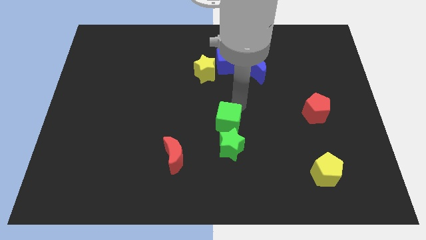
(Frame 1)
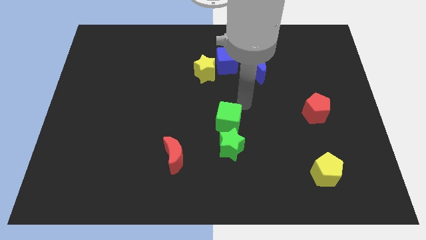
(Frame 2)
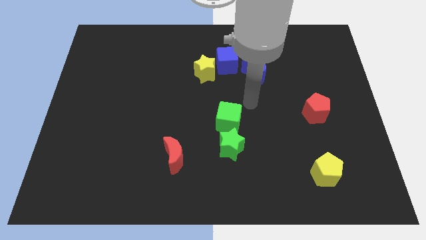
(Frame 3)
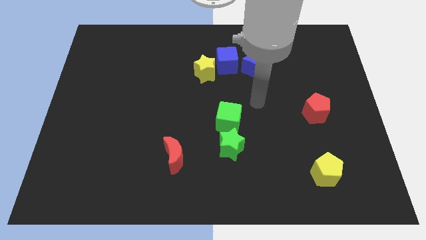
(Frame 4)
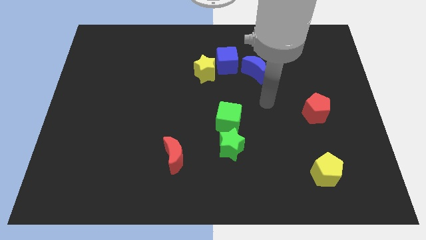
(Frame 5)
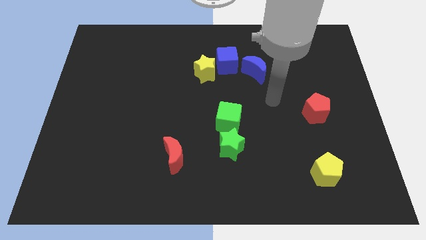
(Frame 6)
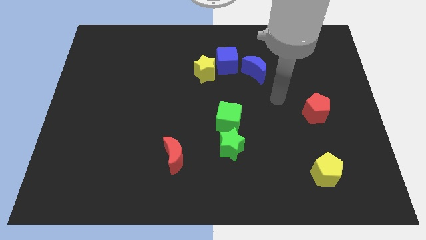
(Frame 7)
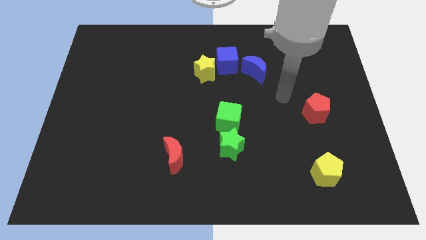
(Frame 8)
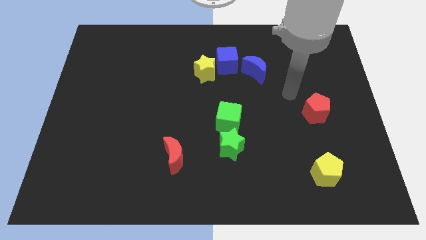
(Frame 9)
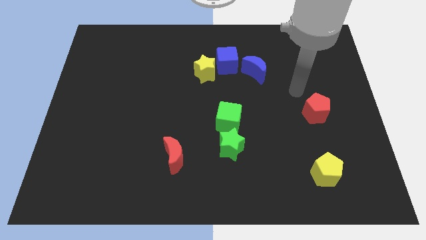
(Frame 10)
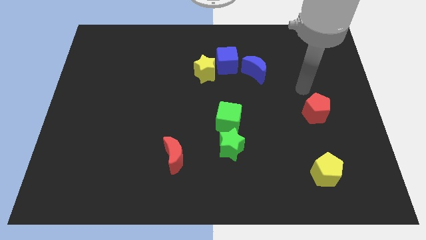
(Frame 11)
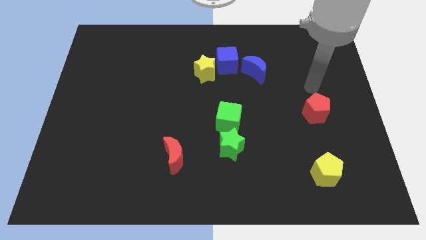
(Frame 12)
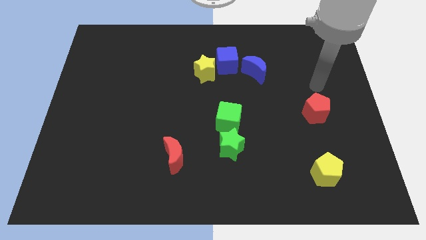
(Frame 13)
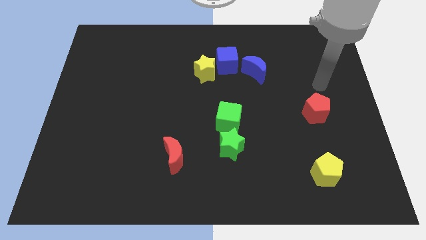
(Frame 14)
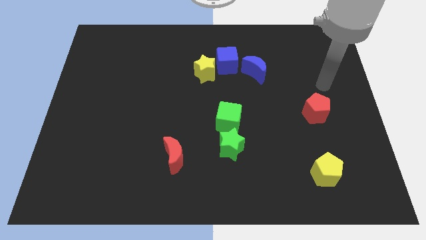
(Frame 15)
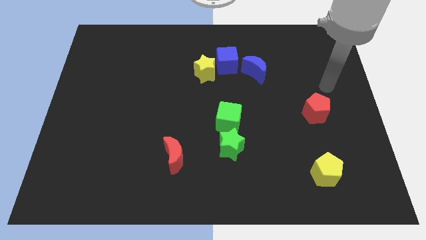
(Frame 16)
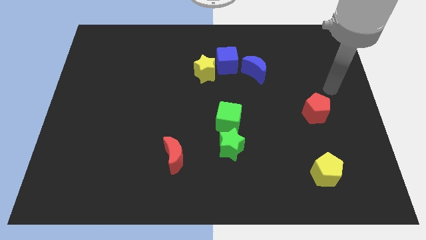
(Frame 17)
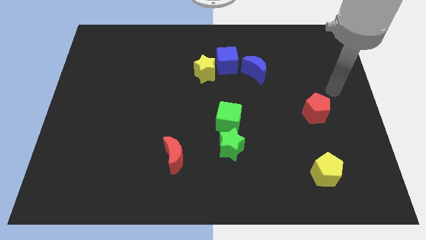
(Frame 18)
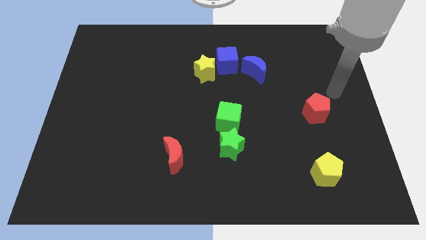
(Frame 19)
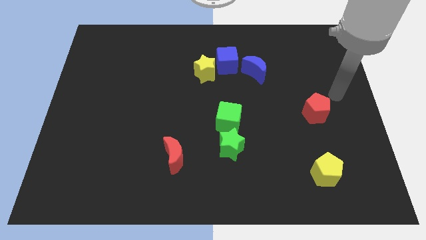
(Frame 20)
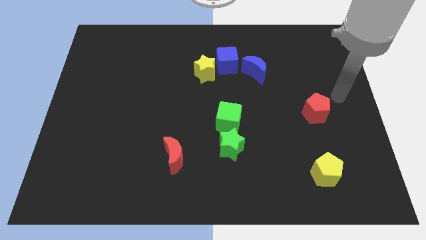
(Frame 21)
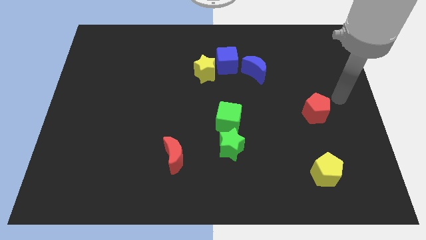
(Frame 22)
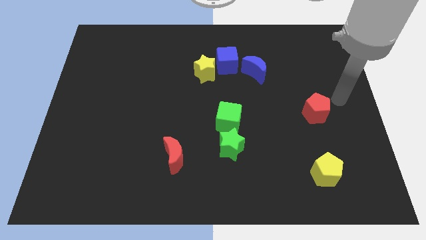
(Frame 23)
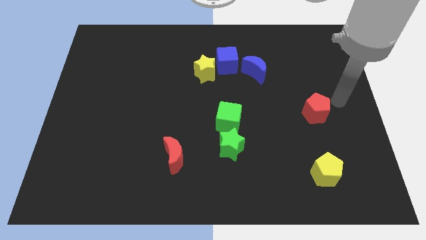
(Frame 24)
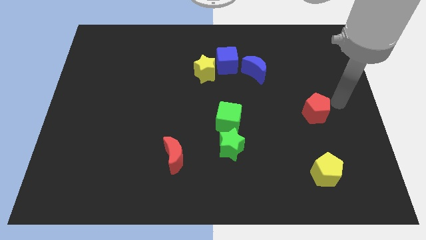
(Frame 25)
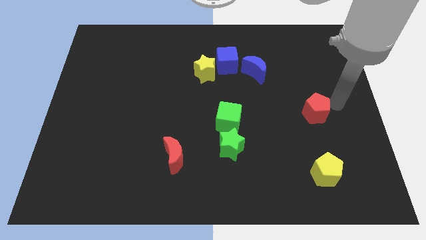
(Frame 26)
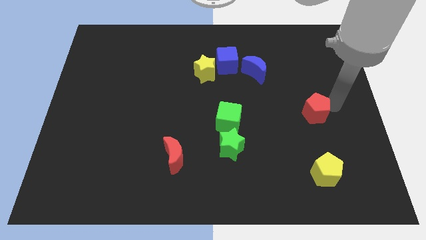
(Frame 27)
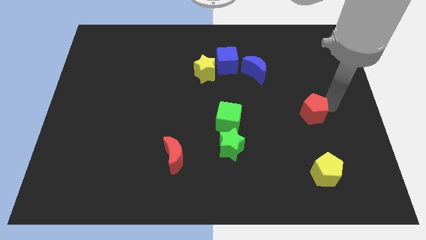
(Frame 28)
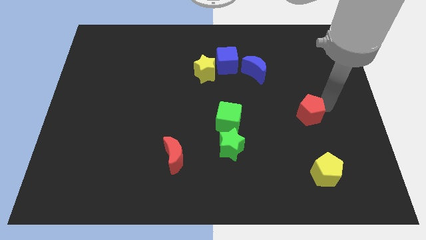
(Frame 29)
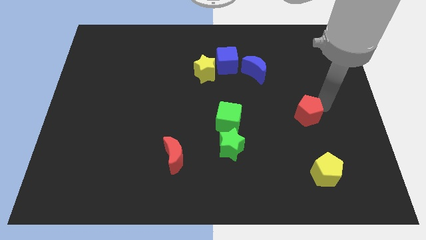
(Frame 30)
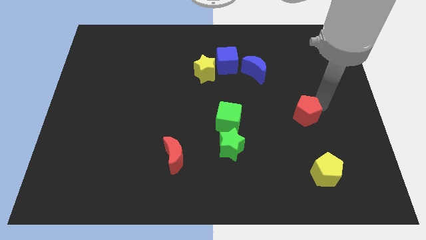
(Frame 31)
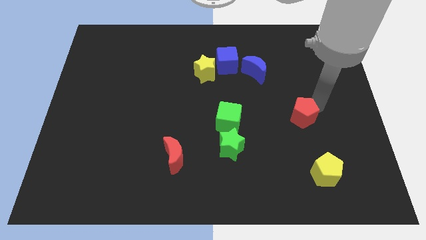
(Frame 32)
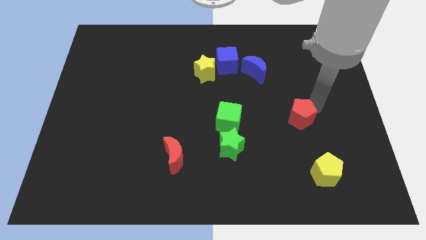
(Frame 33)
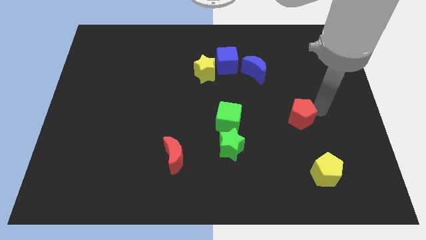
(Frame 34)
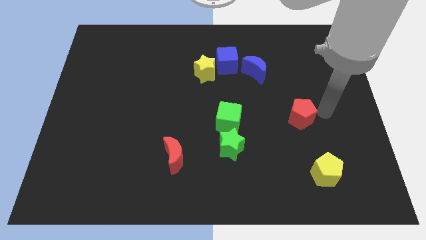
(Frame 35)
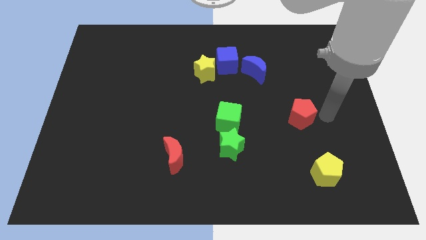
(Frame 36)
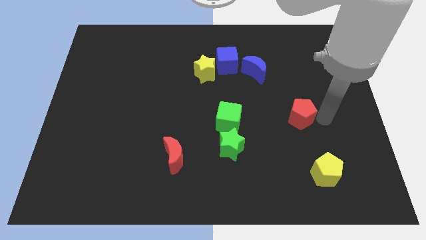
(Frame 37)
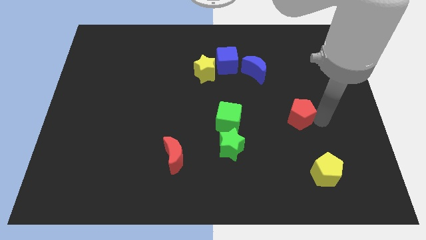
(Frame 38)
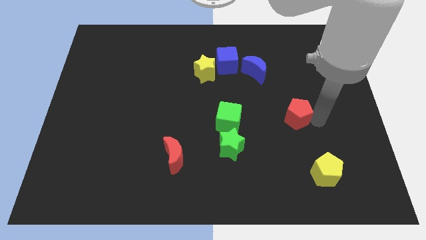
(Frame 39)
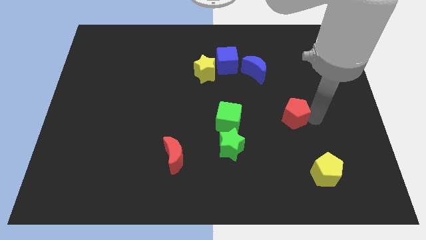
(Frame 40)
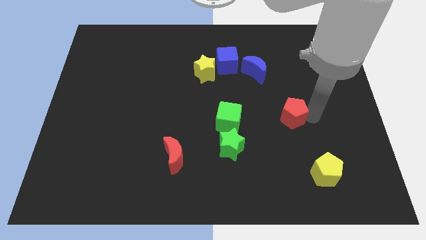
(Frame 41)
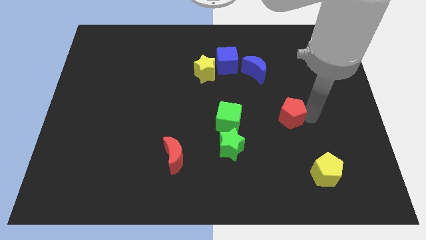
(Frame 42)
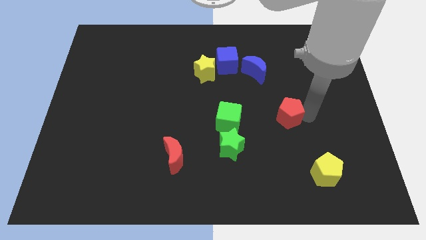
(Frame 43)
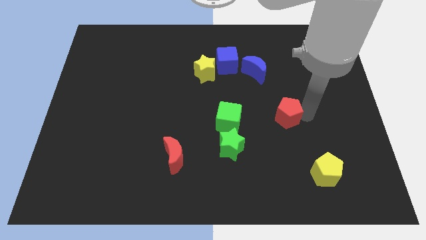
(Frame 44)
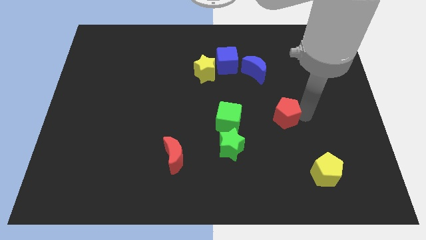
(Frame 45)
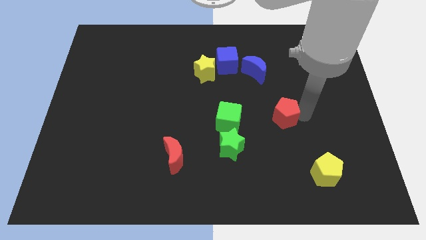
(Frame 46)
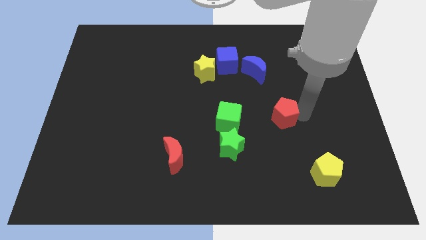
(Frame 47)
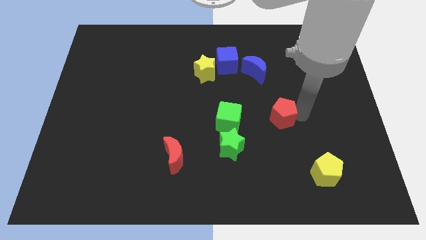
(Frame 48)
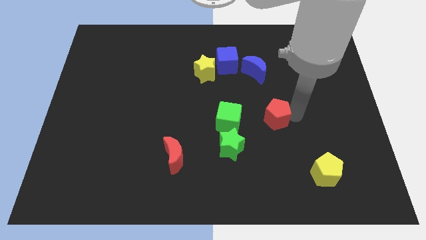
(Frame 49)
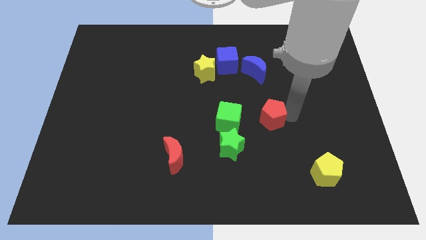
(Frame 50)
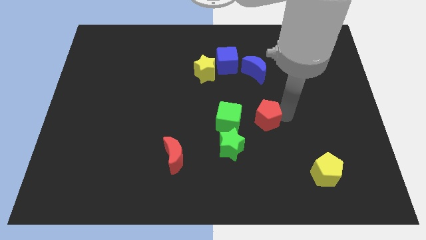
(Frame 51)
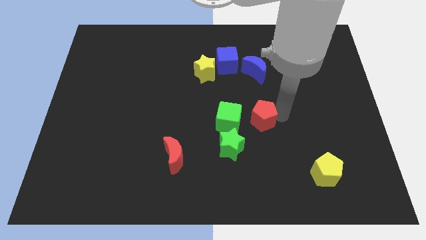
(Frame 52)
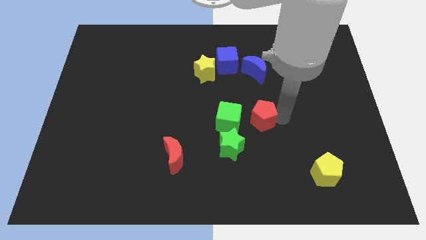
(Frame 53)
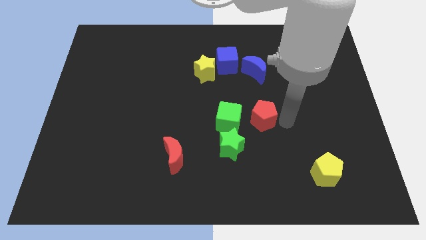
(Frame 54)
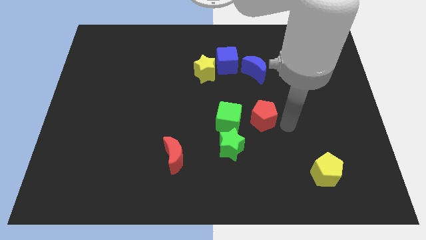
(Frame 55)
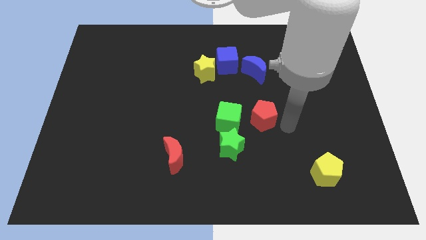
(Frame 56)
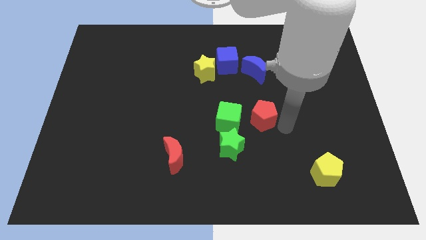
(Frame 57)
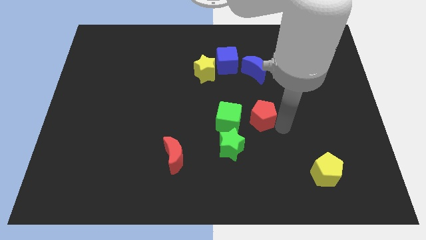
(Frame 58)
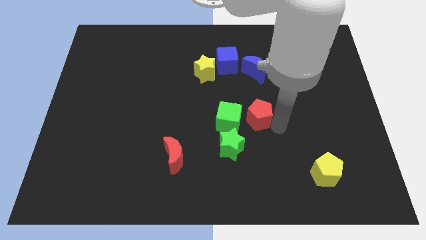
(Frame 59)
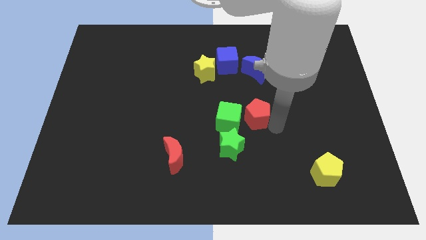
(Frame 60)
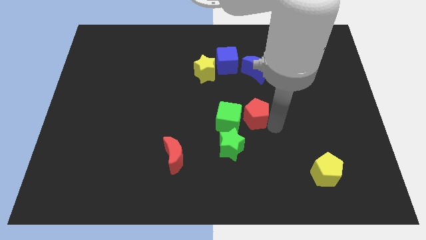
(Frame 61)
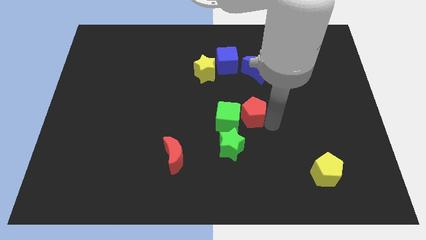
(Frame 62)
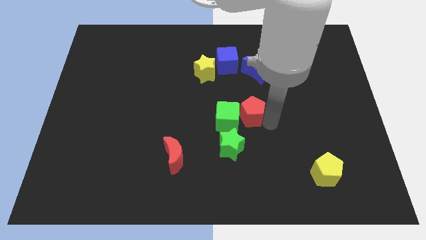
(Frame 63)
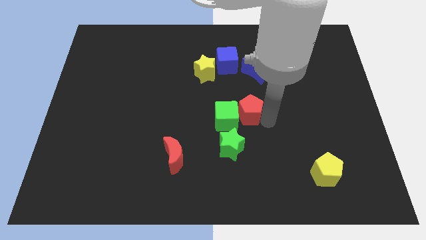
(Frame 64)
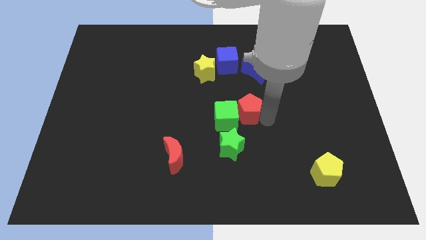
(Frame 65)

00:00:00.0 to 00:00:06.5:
move the red pentagon to the right of the green cube

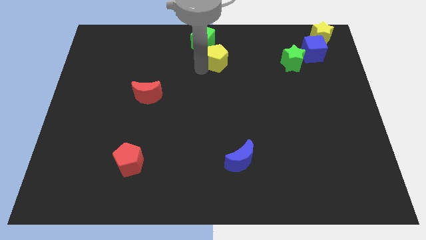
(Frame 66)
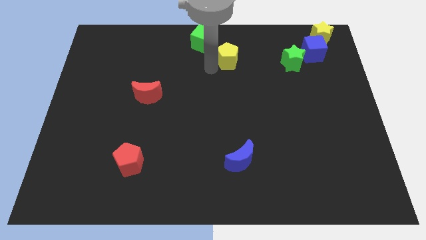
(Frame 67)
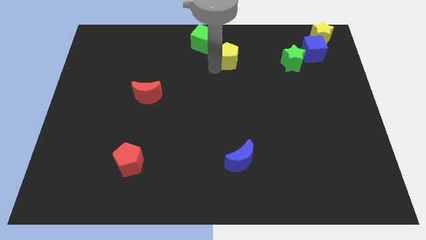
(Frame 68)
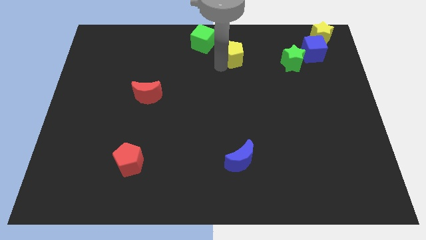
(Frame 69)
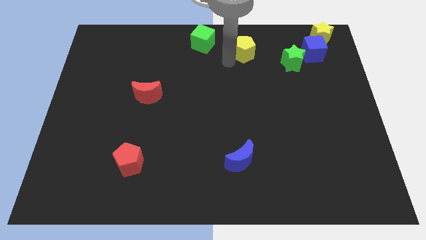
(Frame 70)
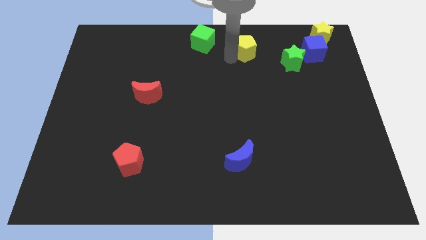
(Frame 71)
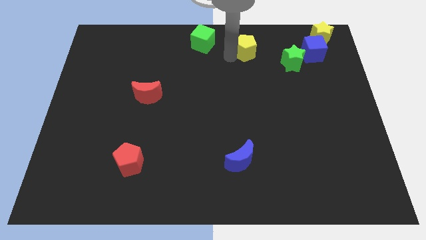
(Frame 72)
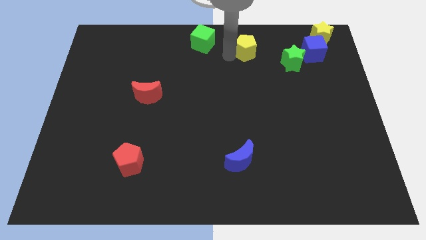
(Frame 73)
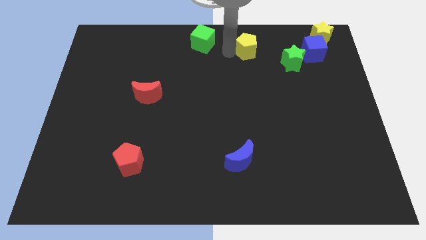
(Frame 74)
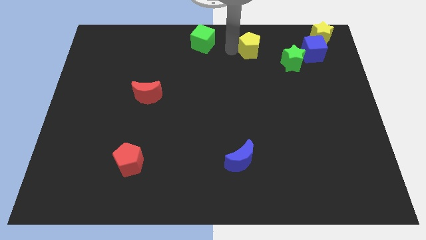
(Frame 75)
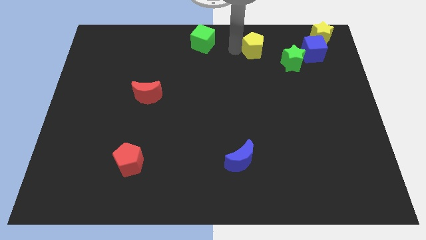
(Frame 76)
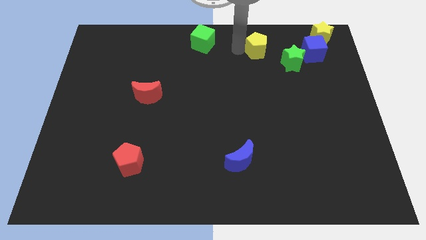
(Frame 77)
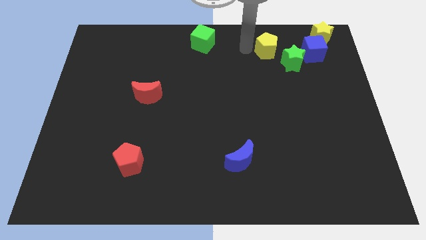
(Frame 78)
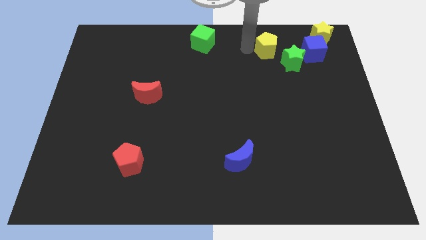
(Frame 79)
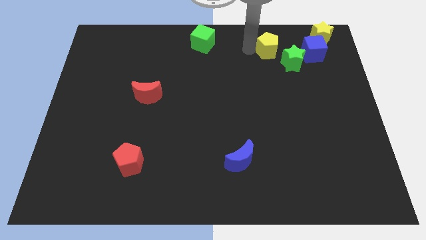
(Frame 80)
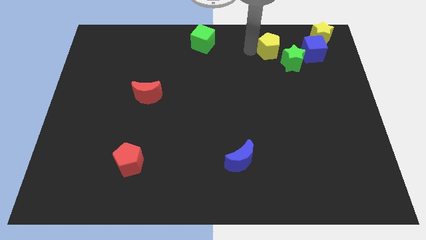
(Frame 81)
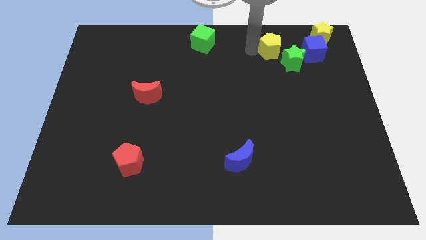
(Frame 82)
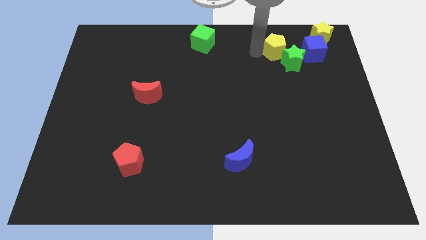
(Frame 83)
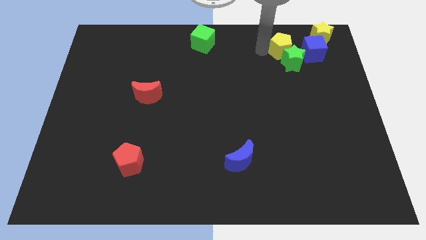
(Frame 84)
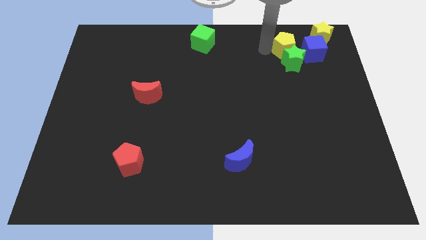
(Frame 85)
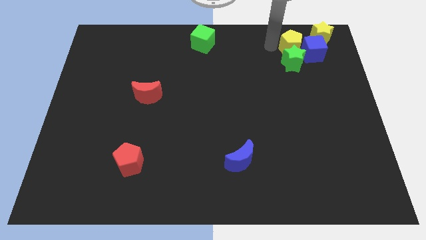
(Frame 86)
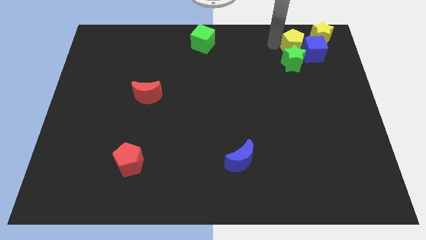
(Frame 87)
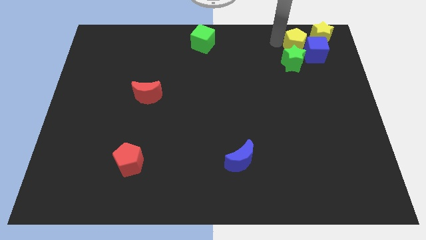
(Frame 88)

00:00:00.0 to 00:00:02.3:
place yellow pentagon towards blue cube
